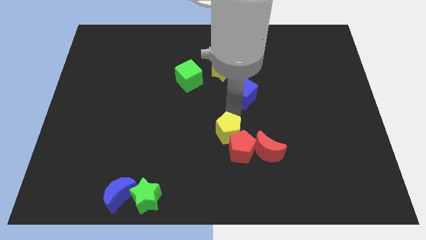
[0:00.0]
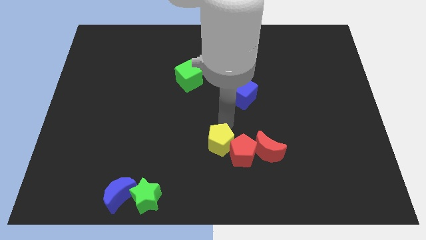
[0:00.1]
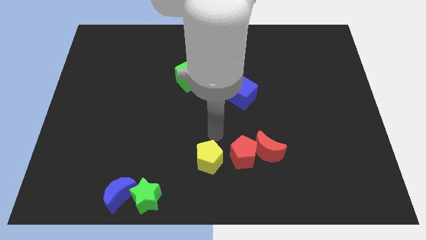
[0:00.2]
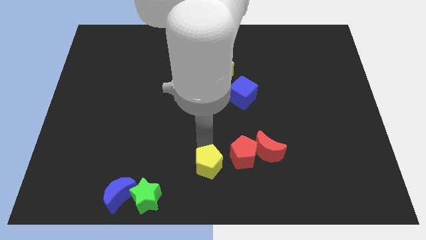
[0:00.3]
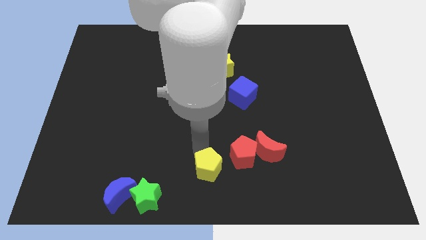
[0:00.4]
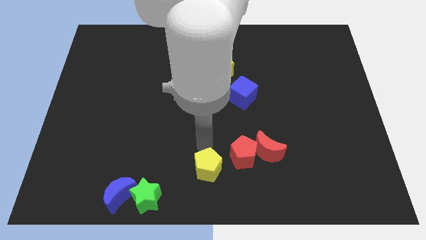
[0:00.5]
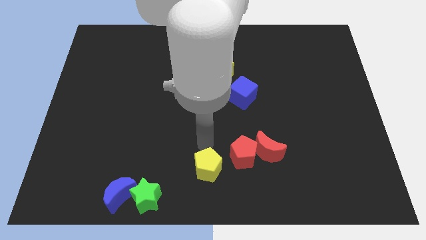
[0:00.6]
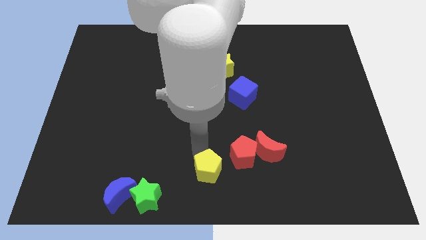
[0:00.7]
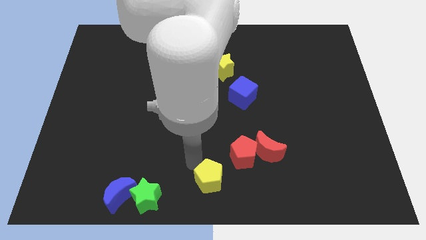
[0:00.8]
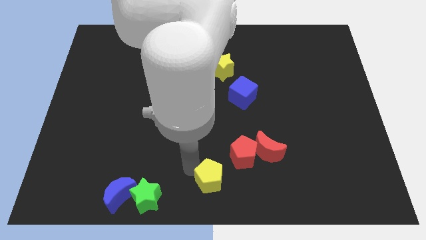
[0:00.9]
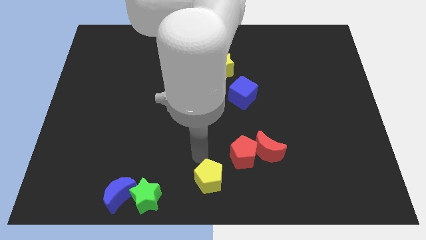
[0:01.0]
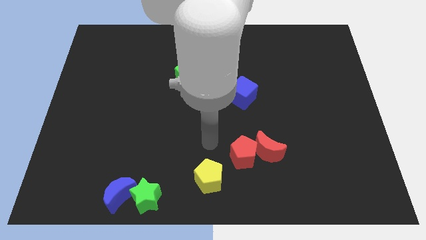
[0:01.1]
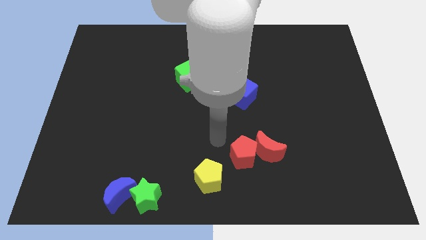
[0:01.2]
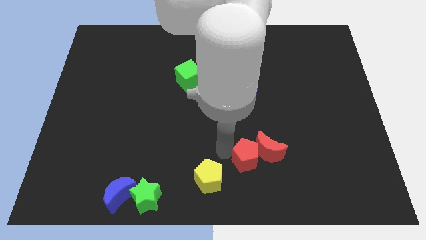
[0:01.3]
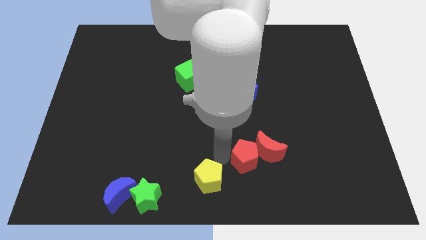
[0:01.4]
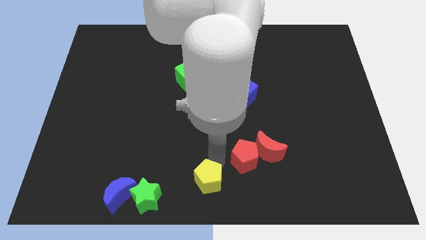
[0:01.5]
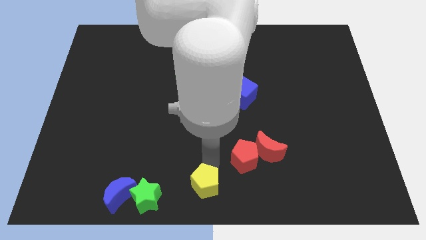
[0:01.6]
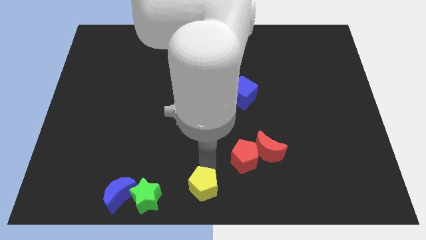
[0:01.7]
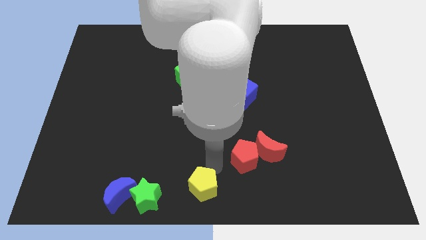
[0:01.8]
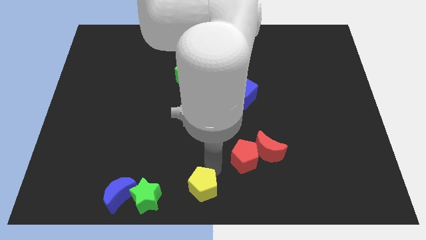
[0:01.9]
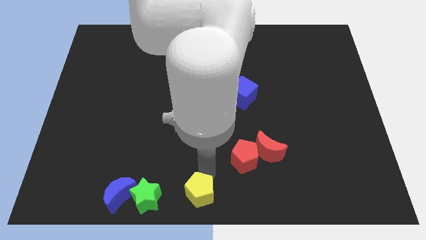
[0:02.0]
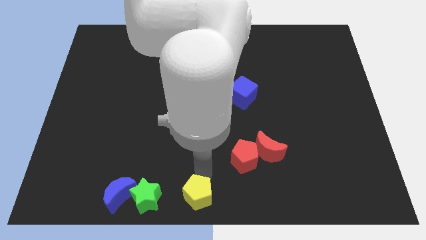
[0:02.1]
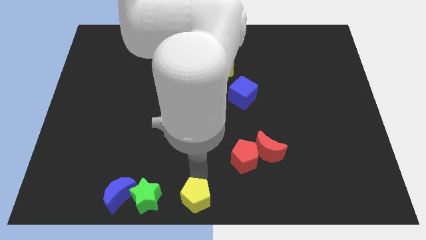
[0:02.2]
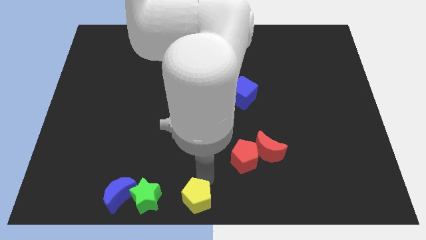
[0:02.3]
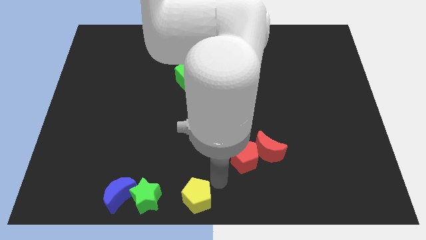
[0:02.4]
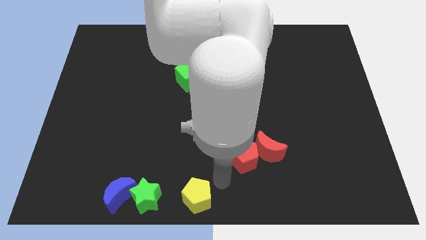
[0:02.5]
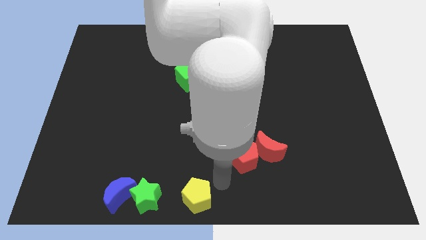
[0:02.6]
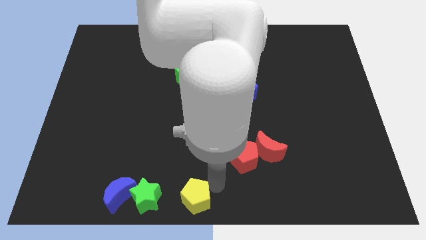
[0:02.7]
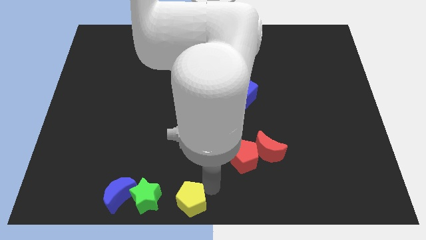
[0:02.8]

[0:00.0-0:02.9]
separate yellow pentagon from red pentagon

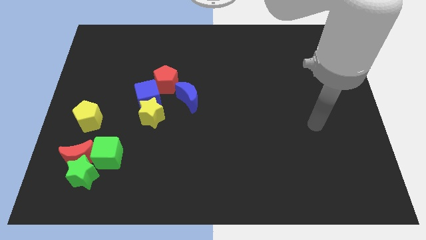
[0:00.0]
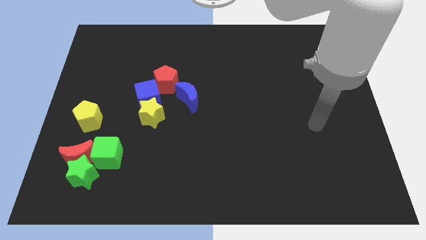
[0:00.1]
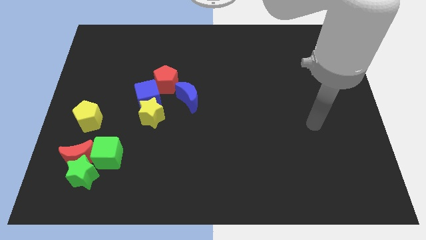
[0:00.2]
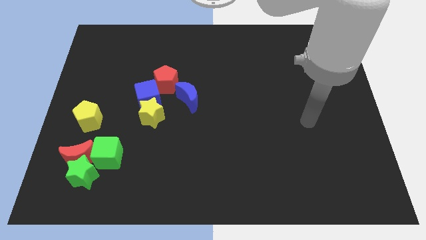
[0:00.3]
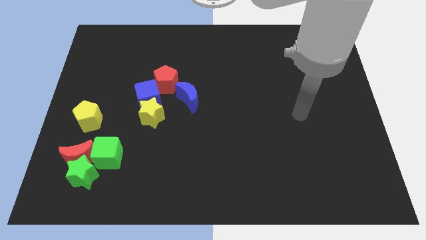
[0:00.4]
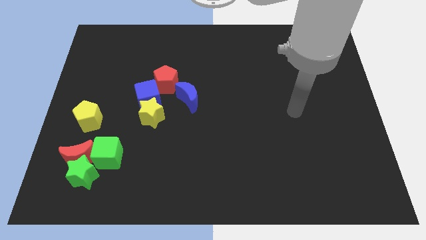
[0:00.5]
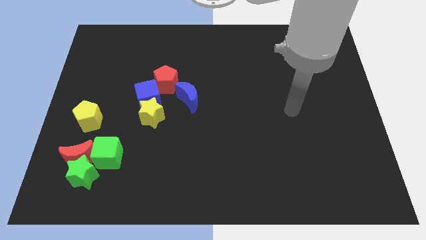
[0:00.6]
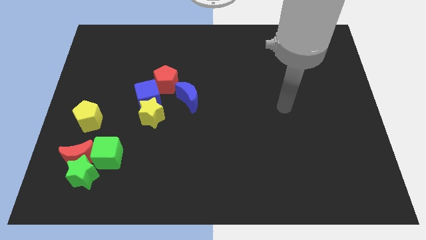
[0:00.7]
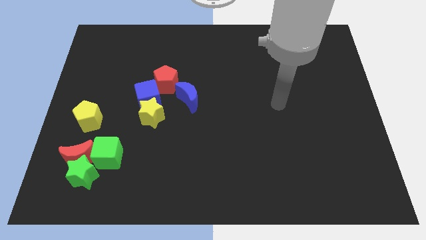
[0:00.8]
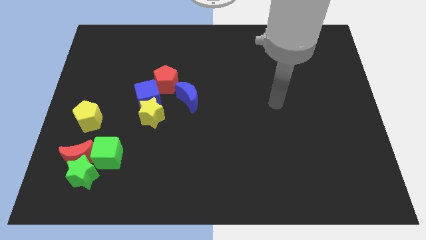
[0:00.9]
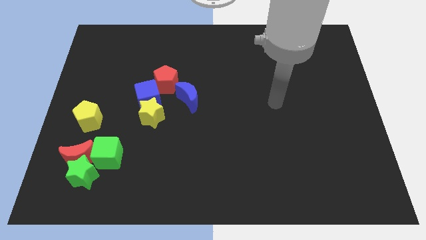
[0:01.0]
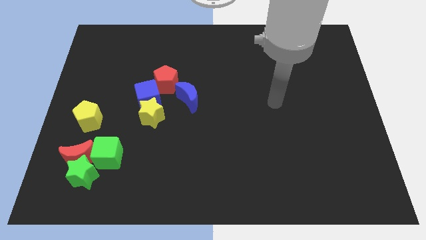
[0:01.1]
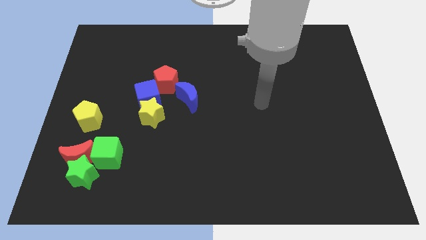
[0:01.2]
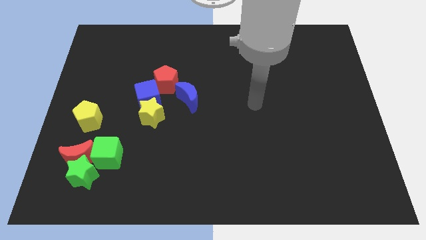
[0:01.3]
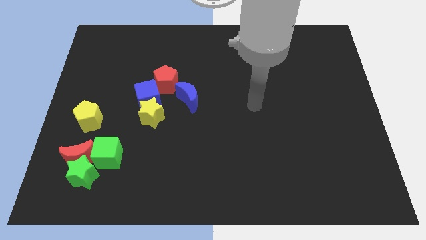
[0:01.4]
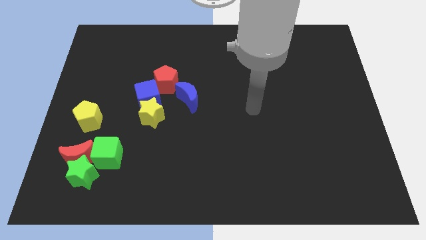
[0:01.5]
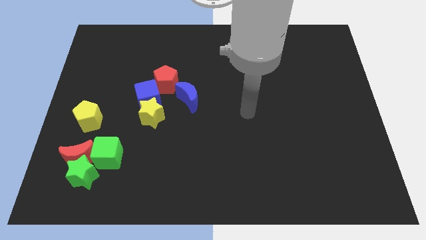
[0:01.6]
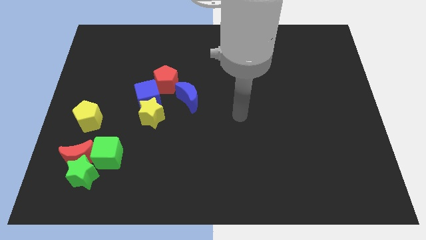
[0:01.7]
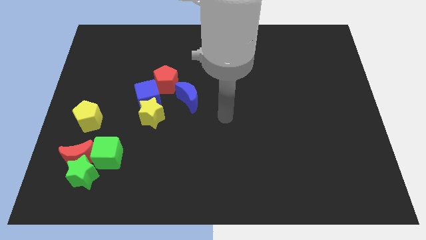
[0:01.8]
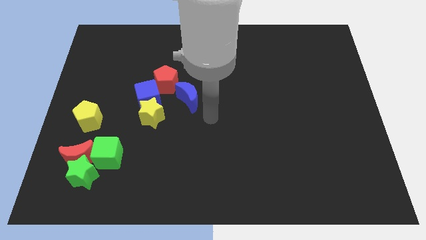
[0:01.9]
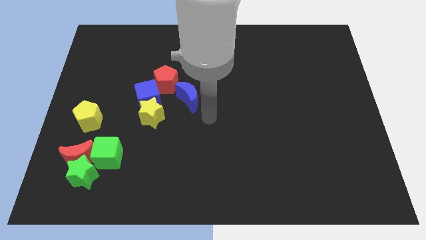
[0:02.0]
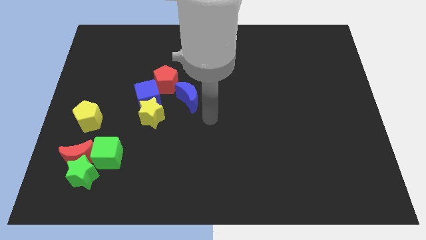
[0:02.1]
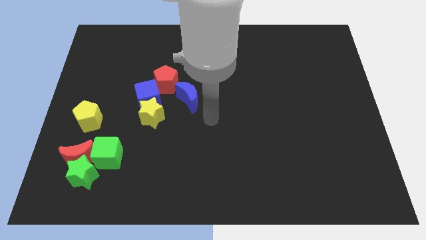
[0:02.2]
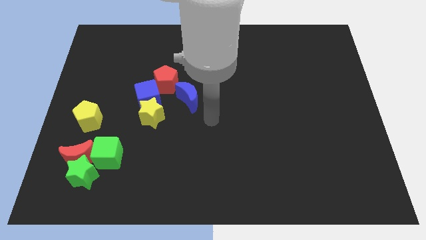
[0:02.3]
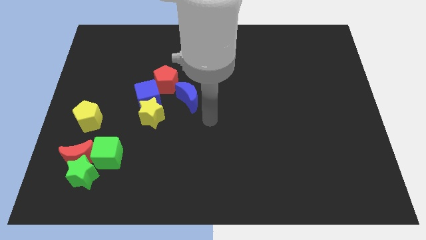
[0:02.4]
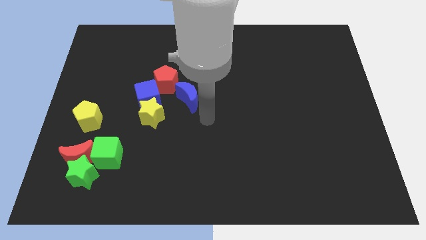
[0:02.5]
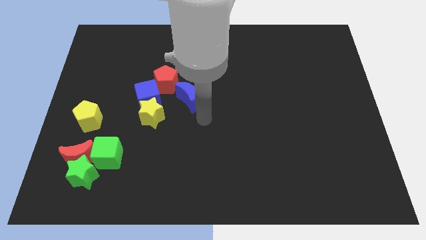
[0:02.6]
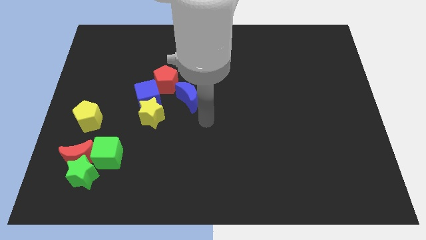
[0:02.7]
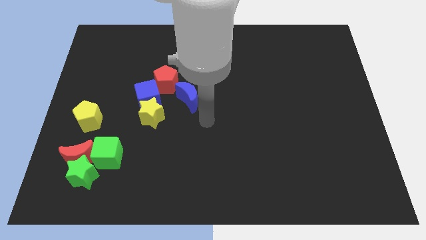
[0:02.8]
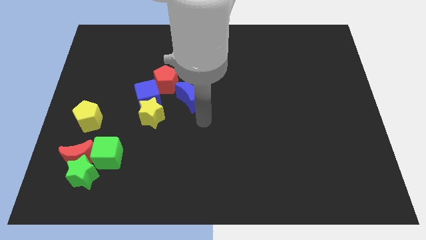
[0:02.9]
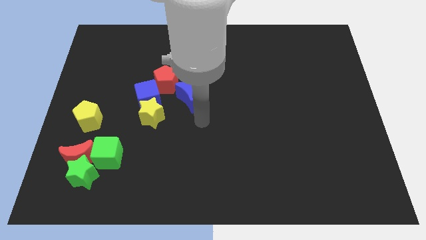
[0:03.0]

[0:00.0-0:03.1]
move the arm at the bottom of the blue crescent

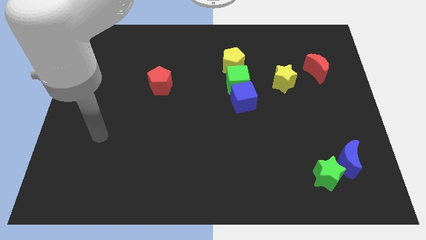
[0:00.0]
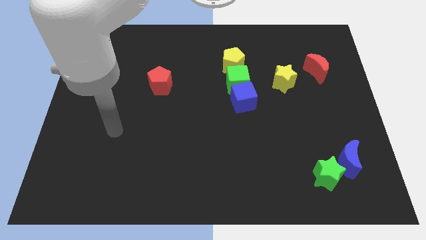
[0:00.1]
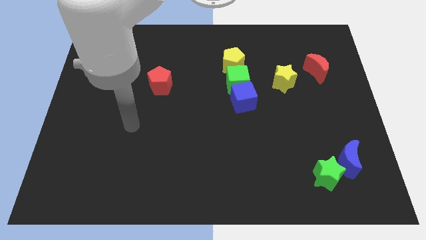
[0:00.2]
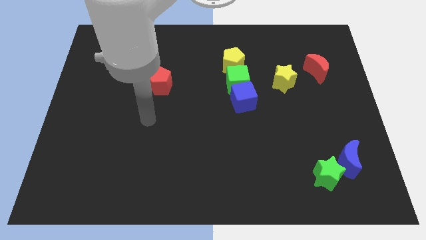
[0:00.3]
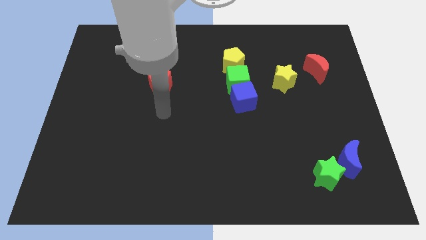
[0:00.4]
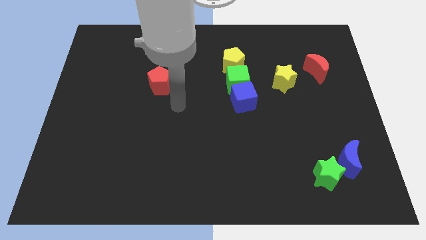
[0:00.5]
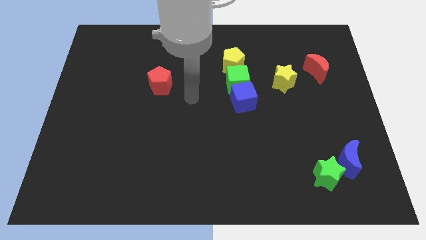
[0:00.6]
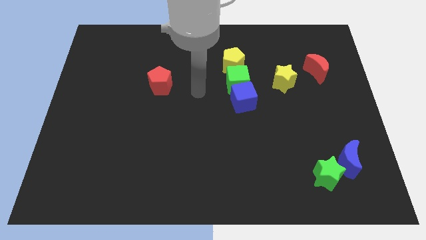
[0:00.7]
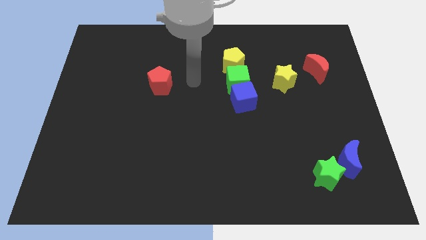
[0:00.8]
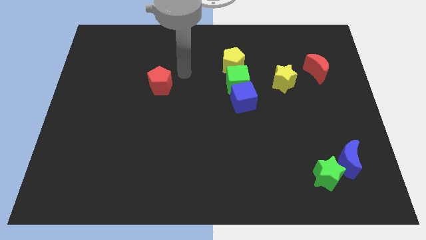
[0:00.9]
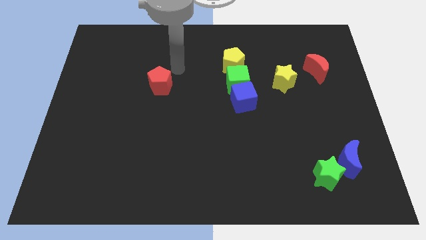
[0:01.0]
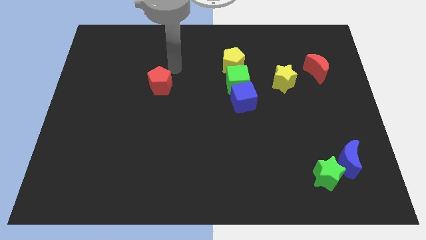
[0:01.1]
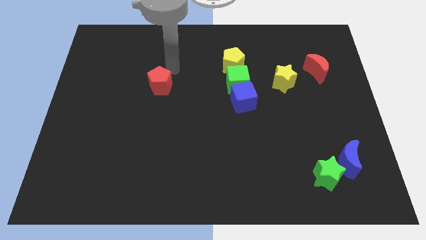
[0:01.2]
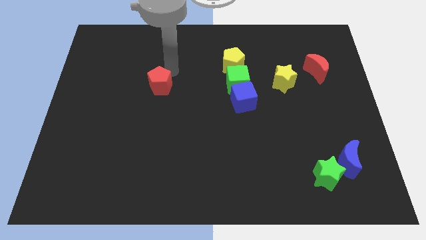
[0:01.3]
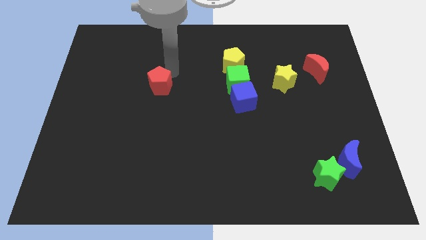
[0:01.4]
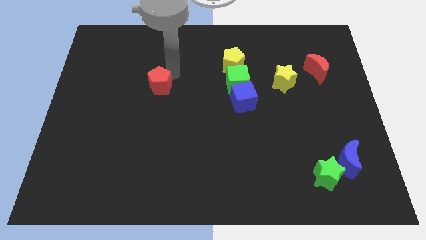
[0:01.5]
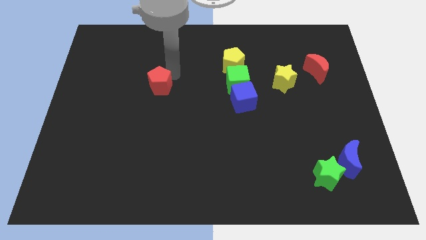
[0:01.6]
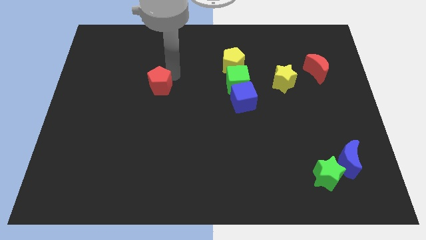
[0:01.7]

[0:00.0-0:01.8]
move your arm towards the red pentagon

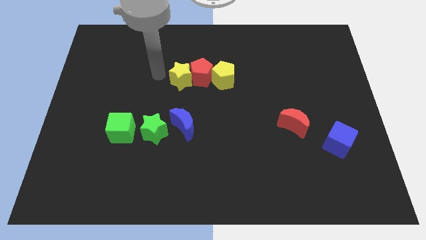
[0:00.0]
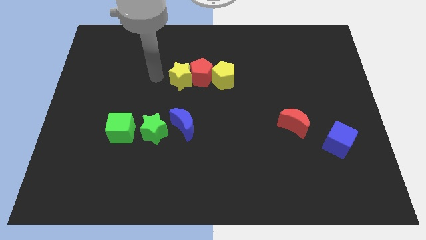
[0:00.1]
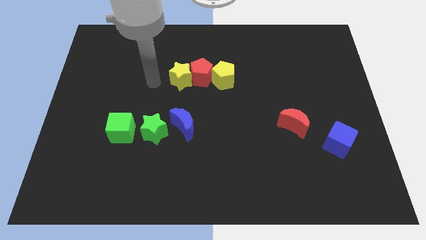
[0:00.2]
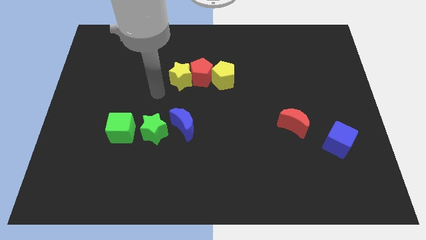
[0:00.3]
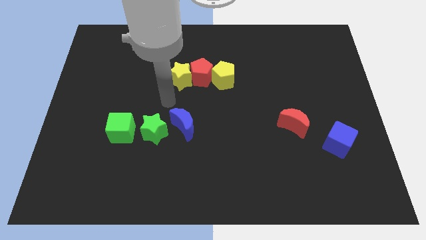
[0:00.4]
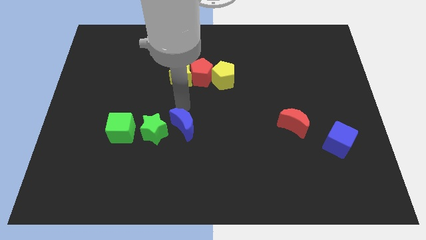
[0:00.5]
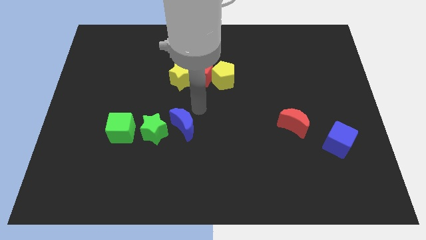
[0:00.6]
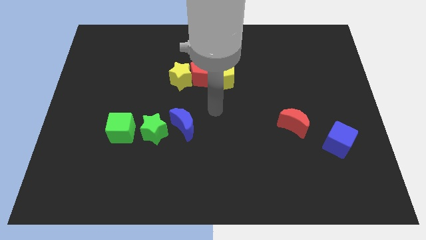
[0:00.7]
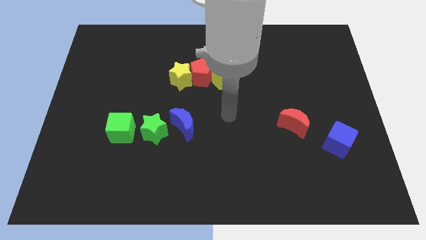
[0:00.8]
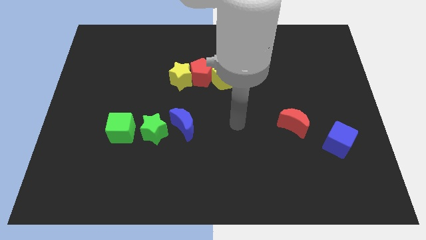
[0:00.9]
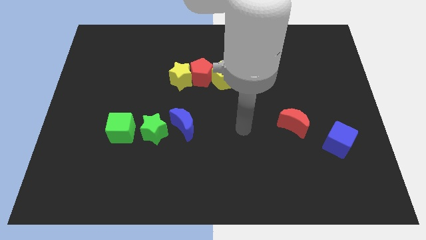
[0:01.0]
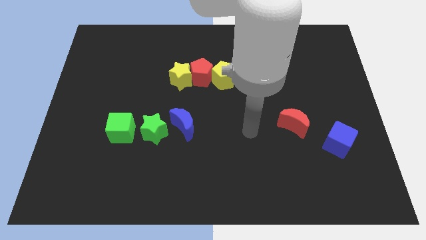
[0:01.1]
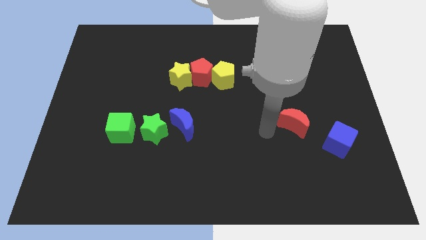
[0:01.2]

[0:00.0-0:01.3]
point your arm at the left of the red crescent
